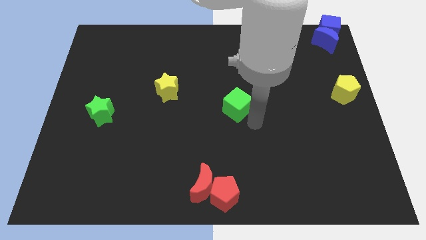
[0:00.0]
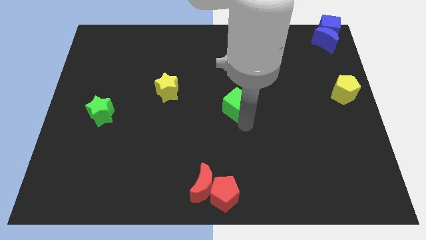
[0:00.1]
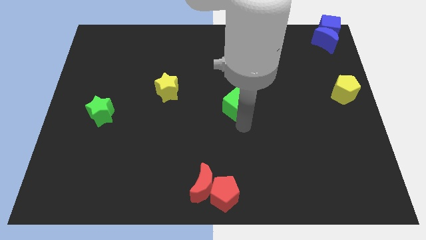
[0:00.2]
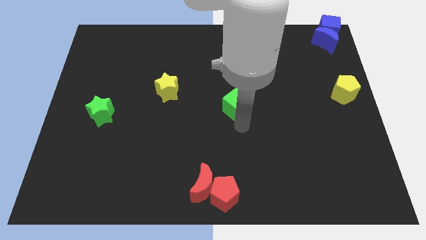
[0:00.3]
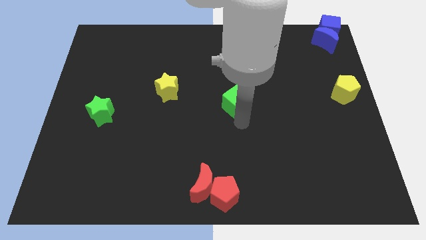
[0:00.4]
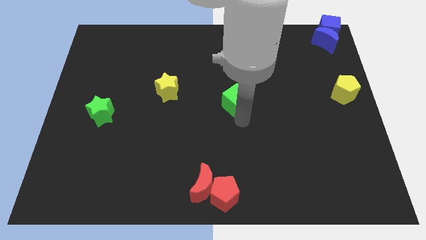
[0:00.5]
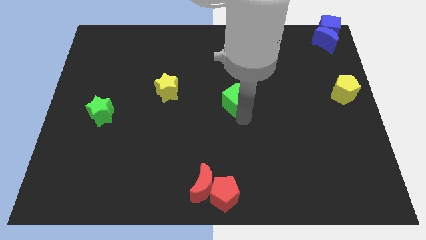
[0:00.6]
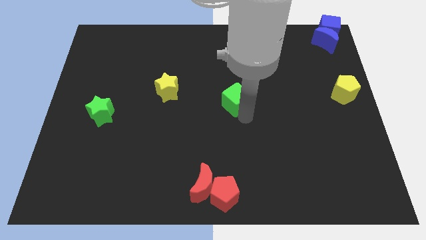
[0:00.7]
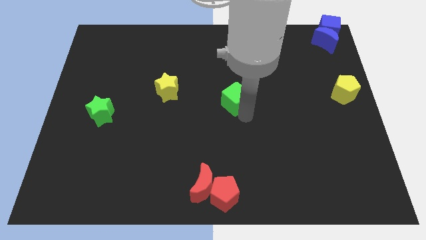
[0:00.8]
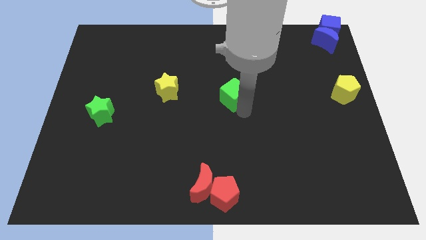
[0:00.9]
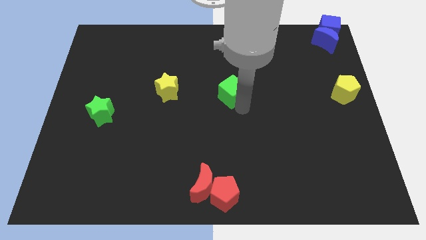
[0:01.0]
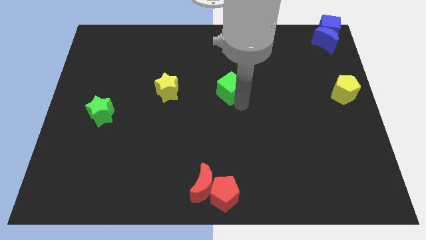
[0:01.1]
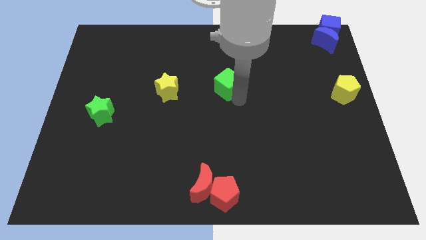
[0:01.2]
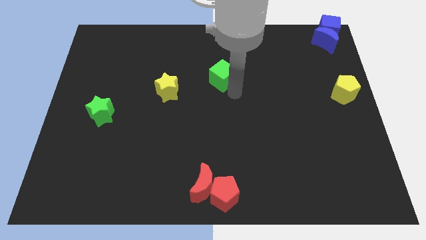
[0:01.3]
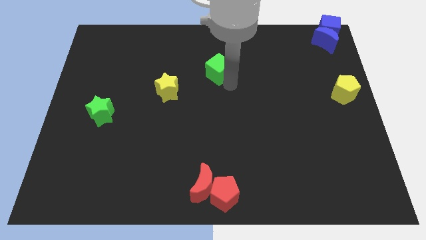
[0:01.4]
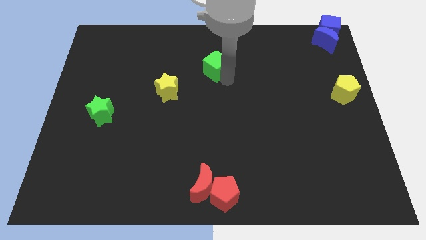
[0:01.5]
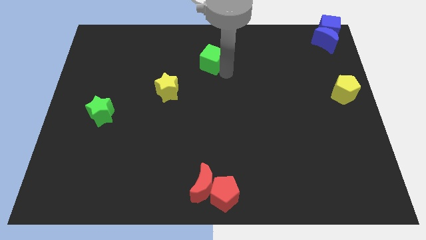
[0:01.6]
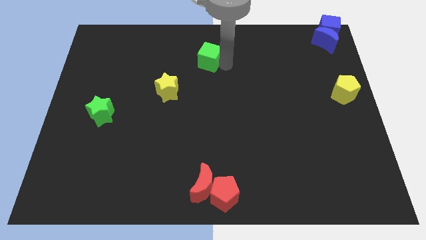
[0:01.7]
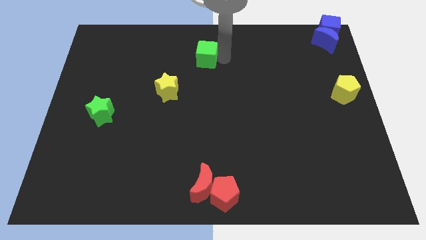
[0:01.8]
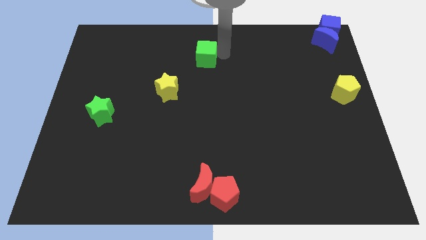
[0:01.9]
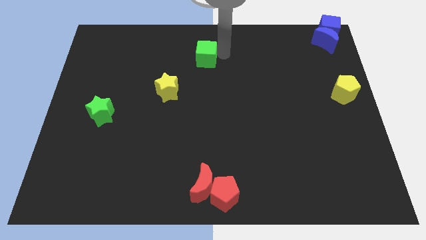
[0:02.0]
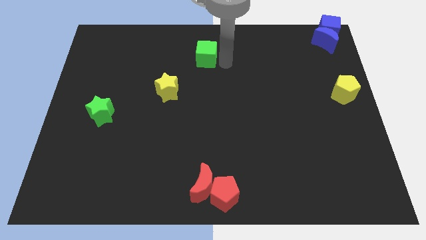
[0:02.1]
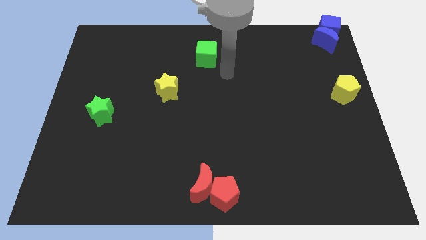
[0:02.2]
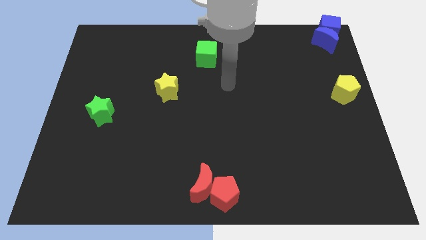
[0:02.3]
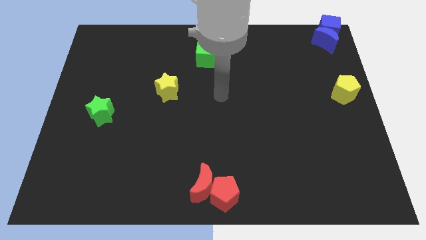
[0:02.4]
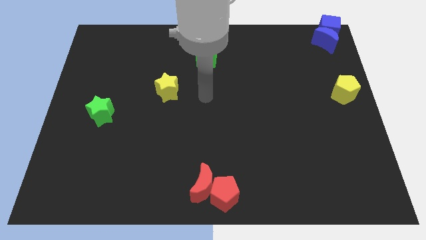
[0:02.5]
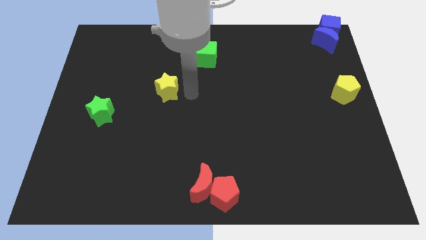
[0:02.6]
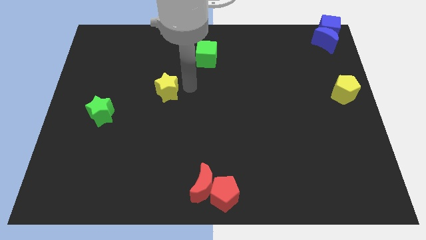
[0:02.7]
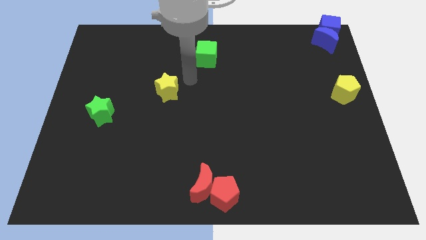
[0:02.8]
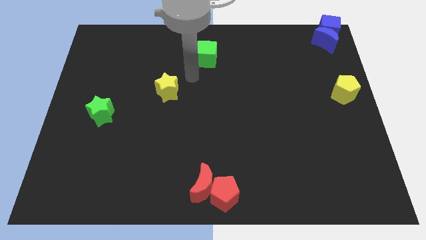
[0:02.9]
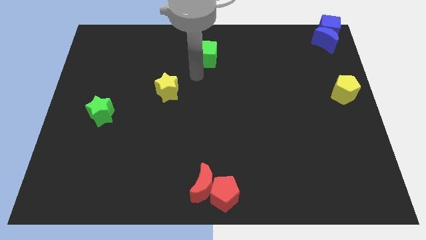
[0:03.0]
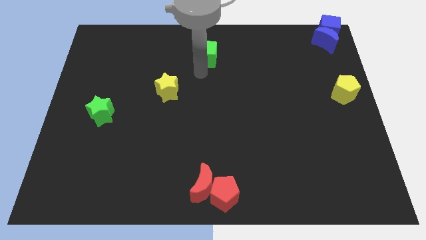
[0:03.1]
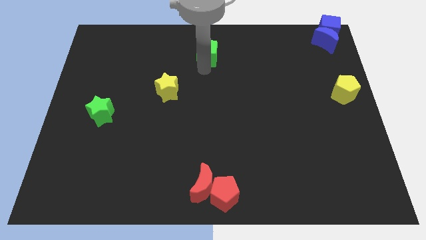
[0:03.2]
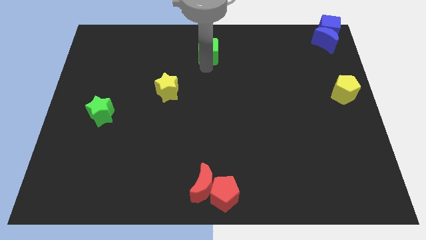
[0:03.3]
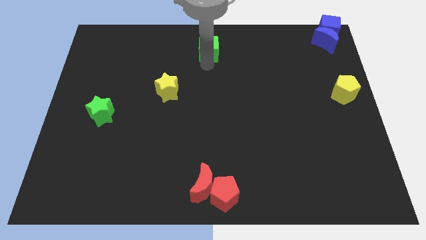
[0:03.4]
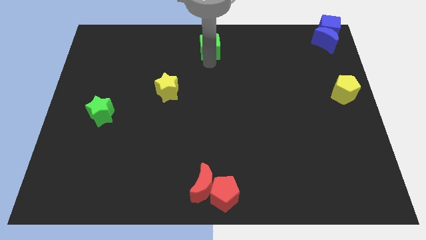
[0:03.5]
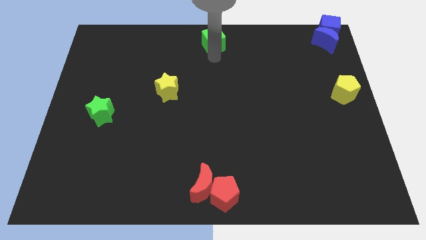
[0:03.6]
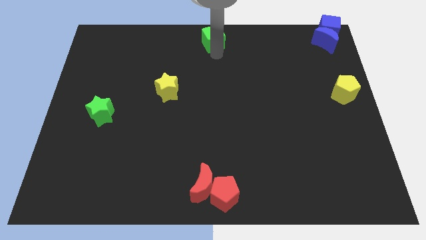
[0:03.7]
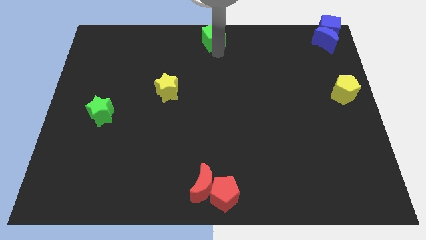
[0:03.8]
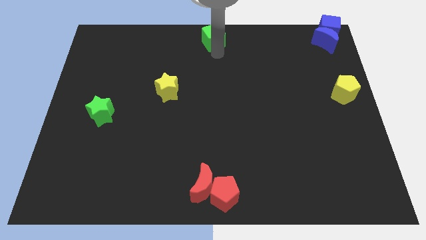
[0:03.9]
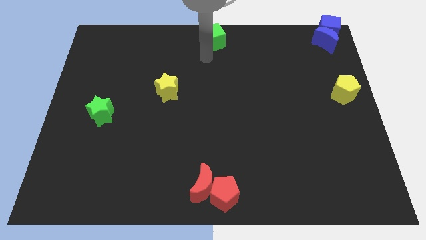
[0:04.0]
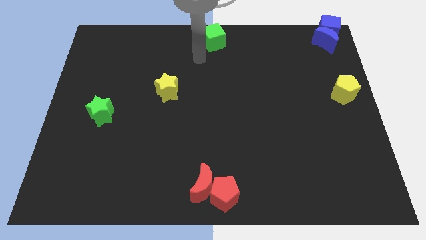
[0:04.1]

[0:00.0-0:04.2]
place the green cube at the top center of the board

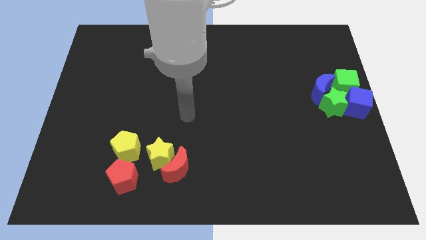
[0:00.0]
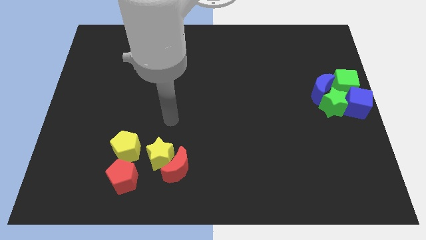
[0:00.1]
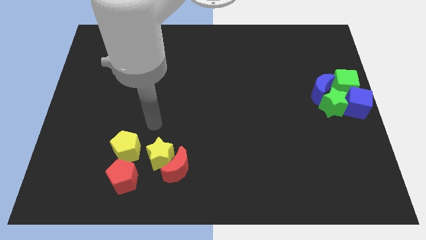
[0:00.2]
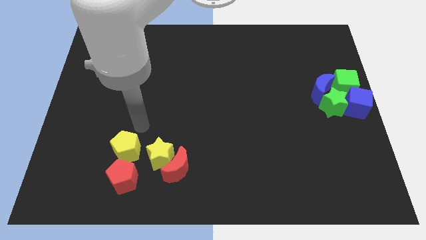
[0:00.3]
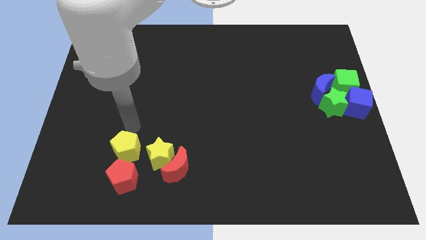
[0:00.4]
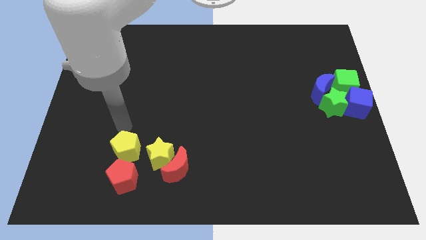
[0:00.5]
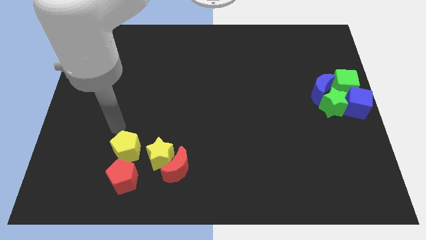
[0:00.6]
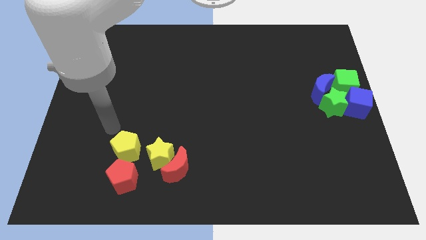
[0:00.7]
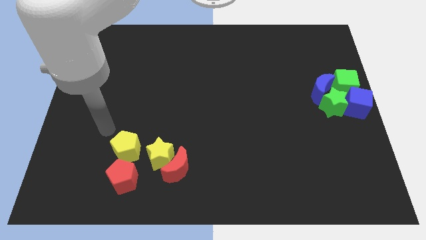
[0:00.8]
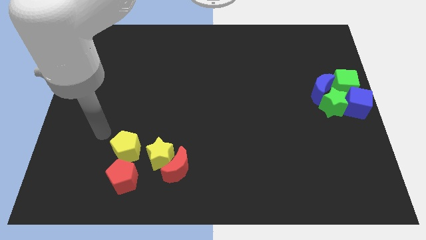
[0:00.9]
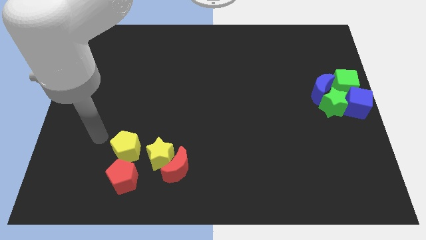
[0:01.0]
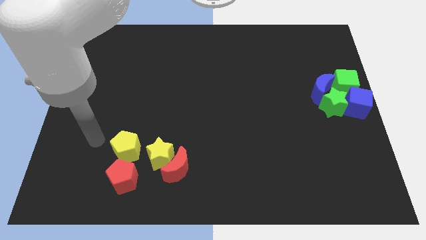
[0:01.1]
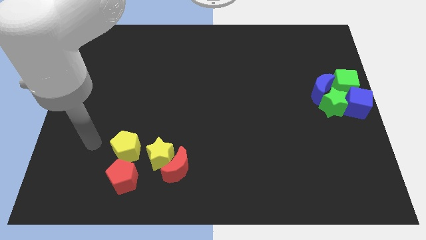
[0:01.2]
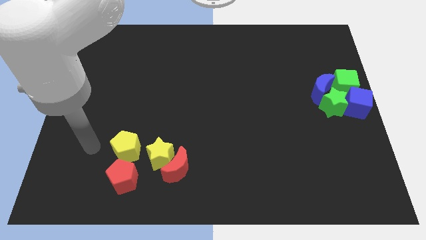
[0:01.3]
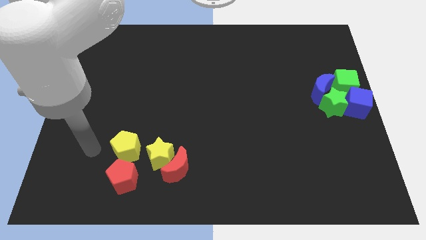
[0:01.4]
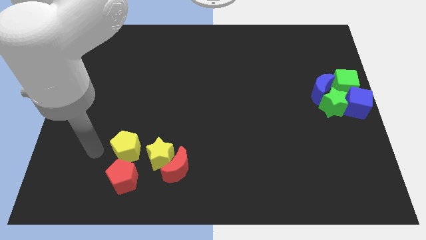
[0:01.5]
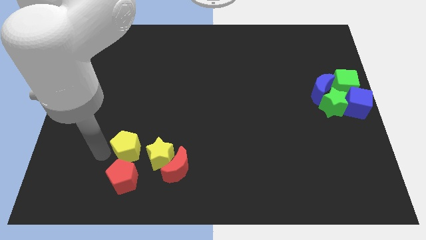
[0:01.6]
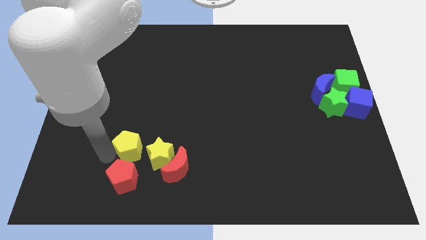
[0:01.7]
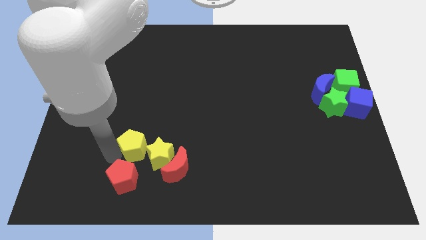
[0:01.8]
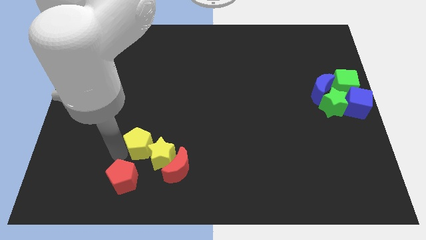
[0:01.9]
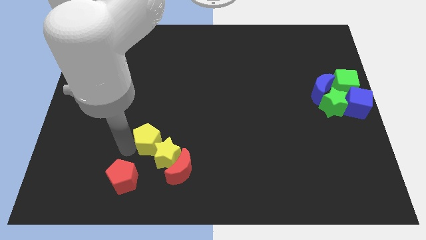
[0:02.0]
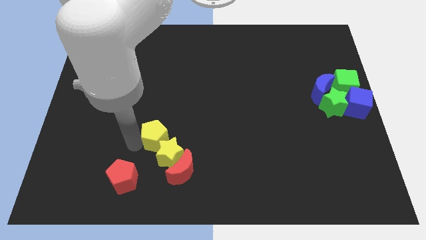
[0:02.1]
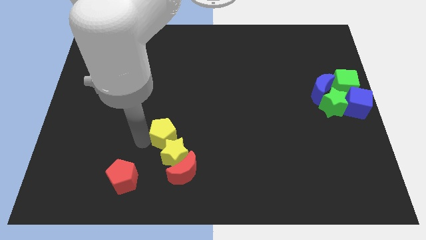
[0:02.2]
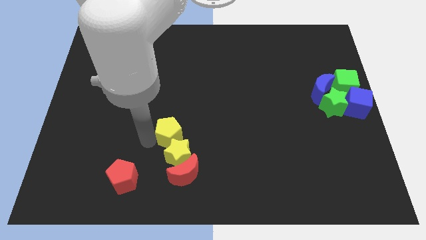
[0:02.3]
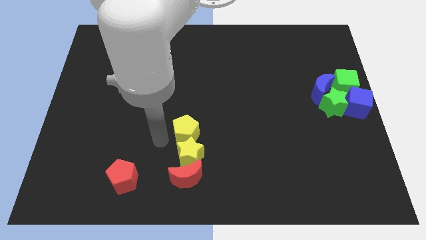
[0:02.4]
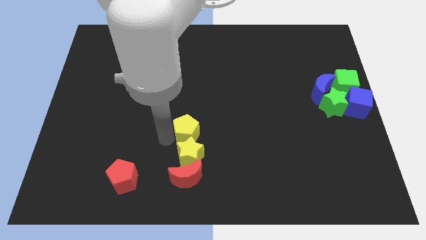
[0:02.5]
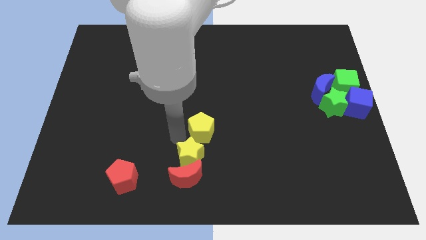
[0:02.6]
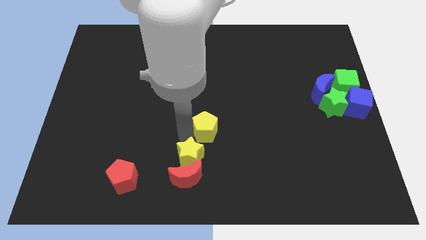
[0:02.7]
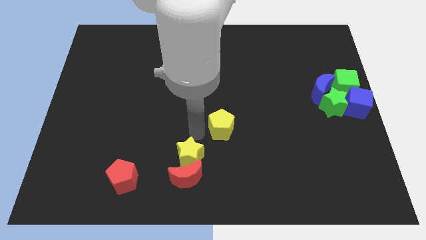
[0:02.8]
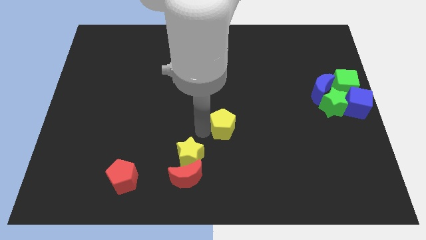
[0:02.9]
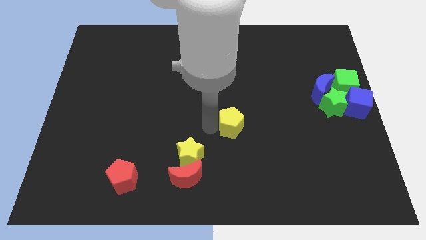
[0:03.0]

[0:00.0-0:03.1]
place the yellow pentagon to the center of the board

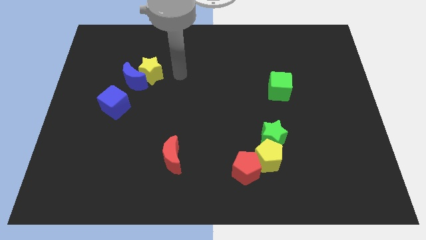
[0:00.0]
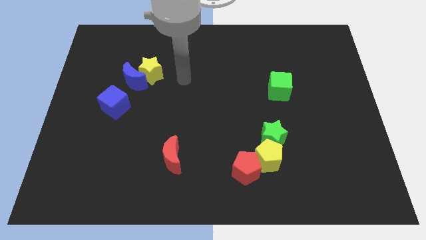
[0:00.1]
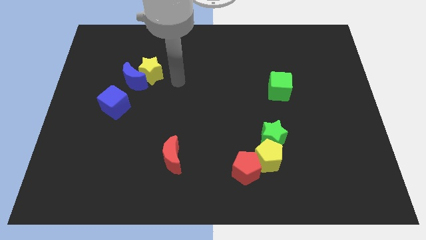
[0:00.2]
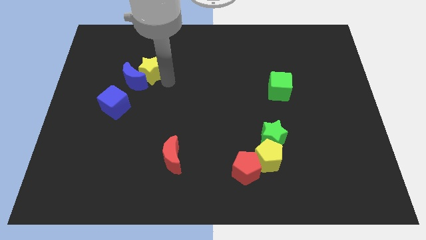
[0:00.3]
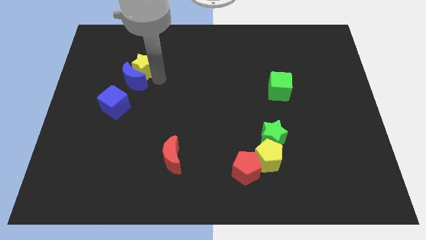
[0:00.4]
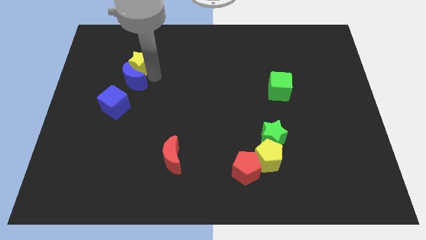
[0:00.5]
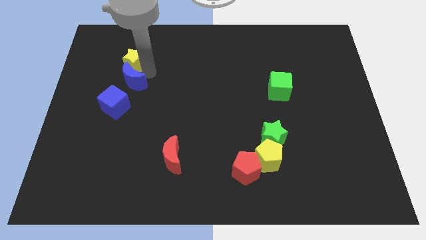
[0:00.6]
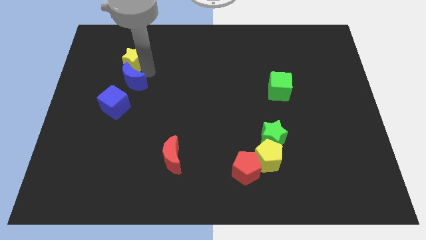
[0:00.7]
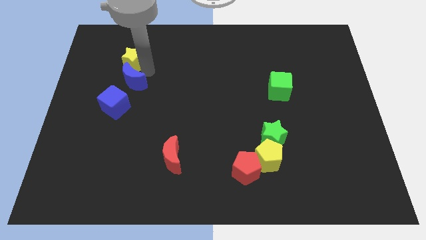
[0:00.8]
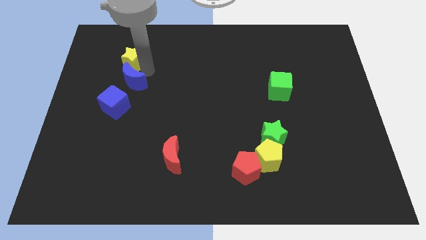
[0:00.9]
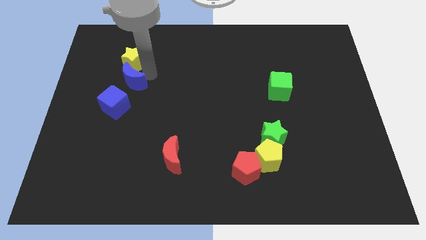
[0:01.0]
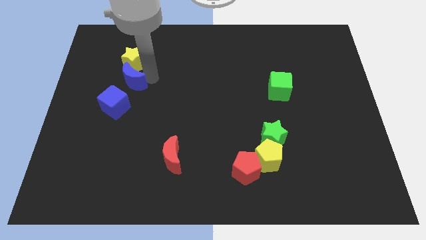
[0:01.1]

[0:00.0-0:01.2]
push the yellow star slightly to the top

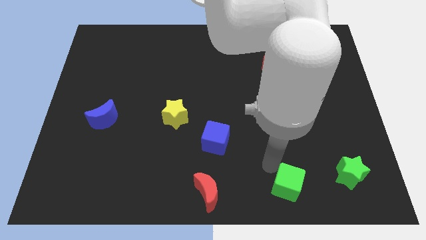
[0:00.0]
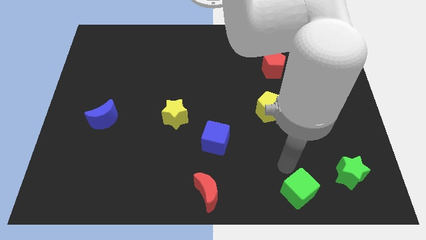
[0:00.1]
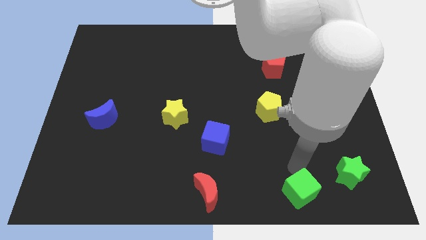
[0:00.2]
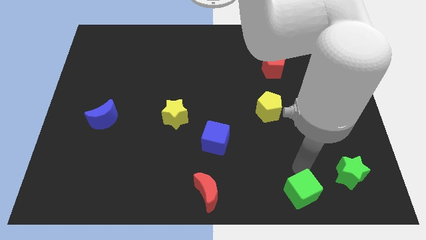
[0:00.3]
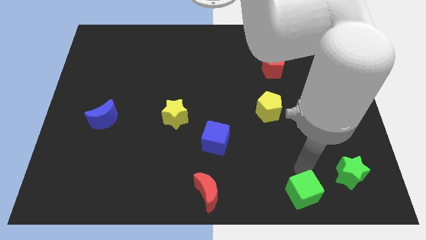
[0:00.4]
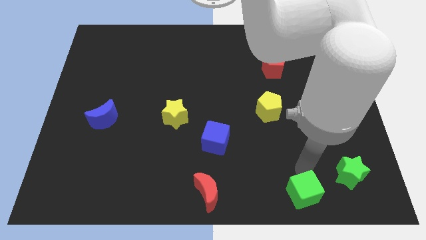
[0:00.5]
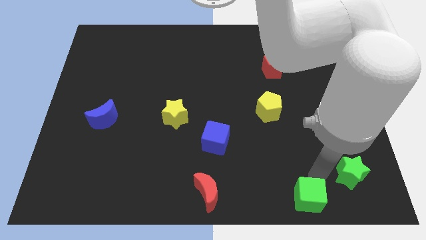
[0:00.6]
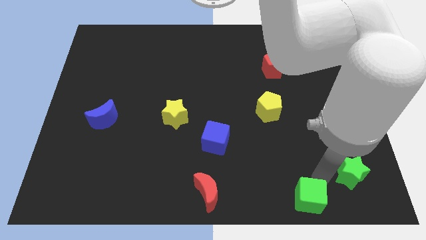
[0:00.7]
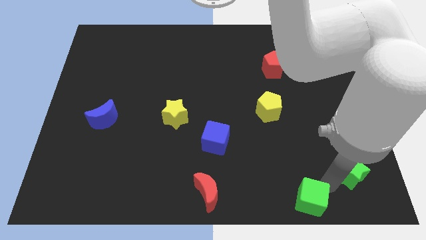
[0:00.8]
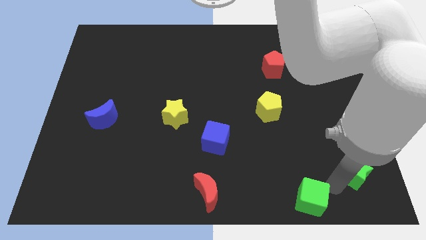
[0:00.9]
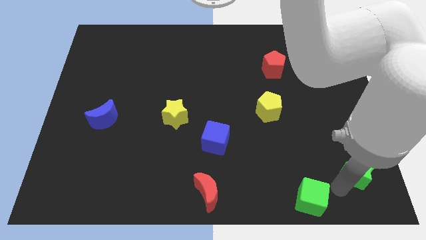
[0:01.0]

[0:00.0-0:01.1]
move the green cube to the right of the red crescent
